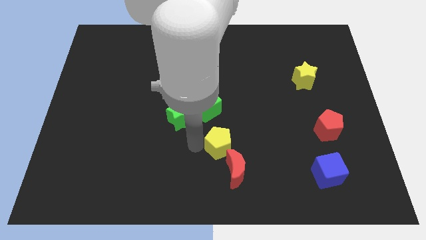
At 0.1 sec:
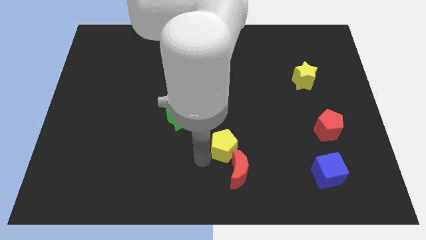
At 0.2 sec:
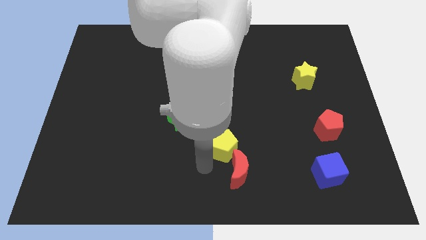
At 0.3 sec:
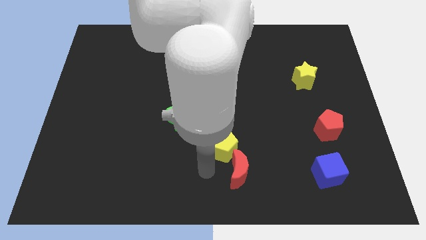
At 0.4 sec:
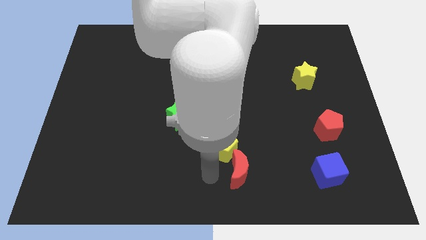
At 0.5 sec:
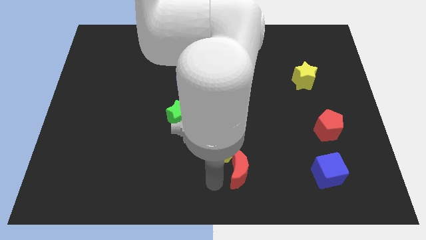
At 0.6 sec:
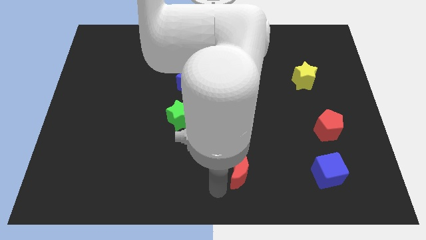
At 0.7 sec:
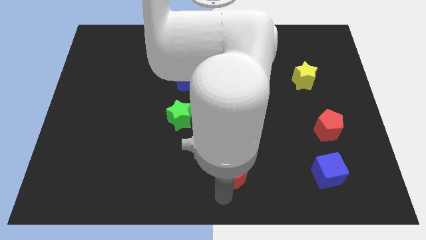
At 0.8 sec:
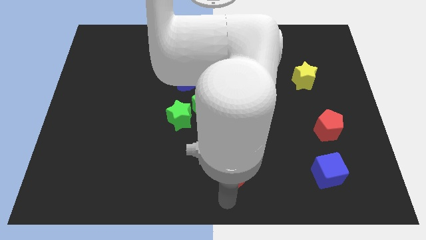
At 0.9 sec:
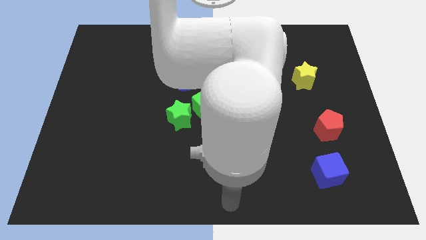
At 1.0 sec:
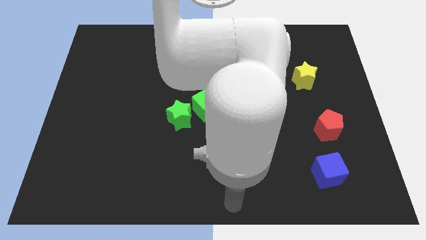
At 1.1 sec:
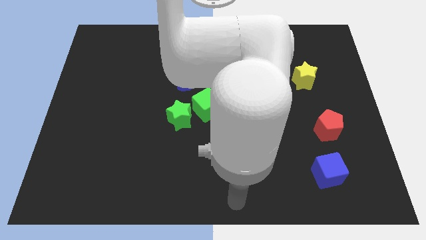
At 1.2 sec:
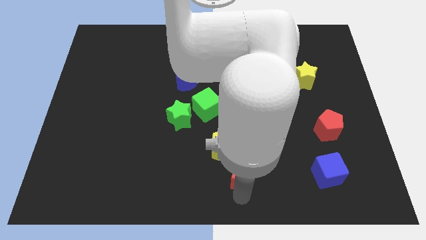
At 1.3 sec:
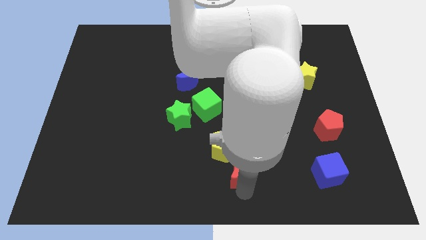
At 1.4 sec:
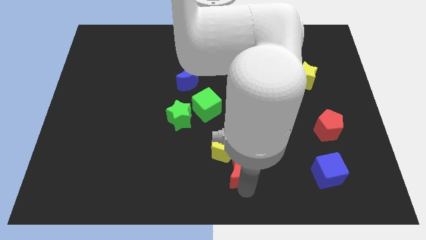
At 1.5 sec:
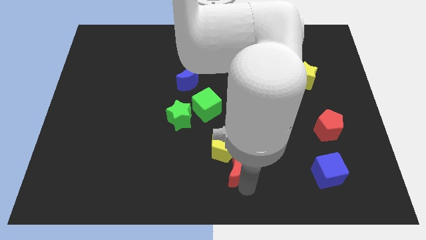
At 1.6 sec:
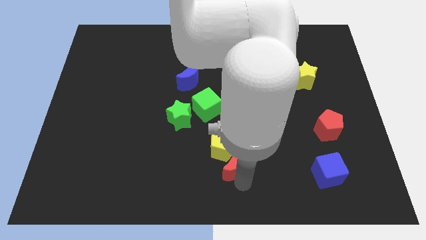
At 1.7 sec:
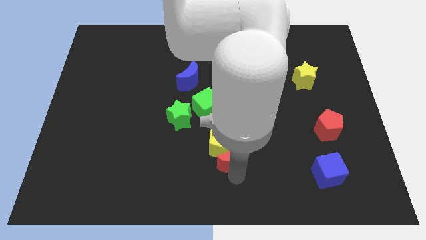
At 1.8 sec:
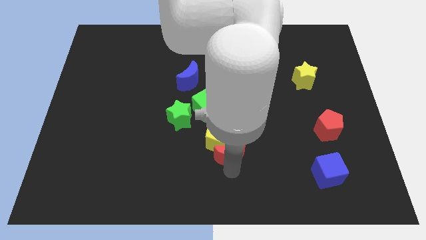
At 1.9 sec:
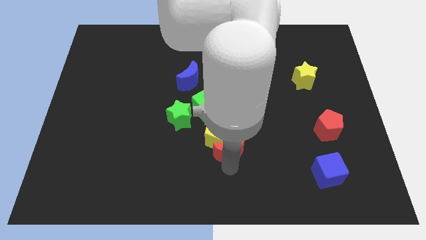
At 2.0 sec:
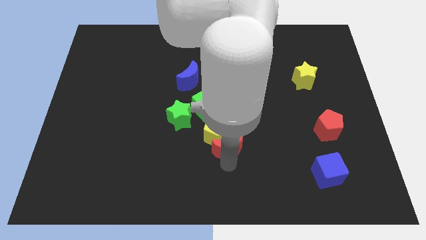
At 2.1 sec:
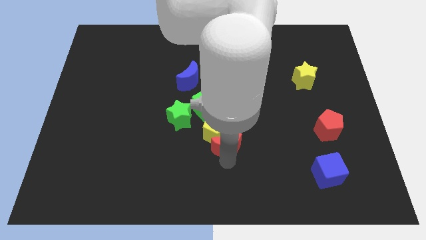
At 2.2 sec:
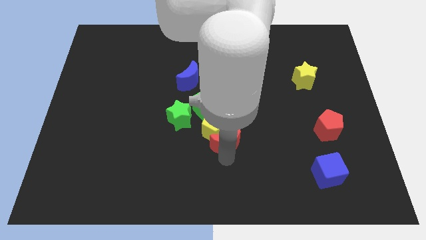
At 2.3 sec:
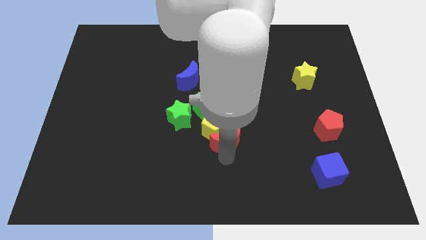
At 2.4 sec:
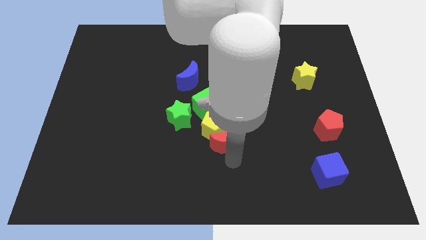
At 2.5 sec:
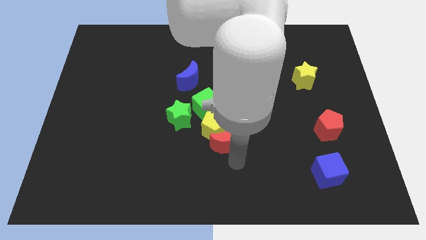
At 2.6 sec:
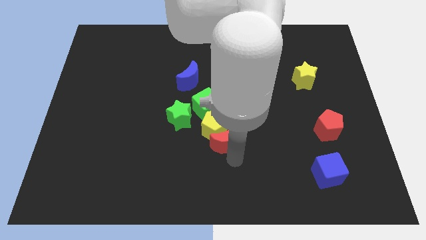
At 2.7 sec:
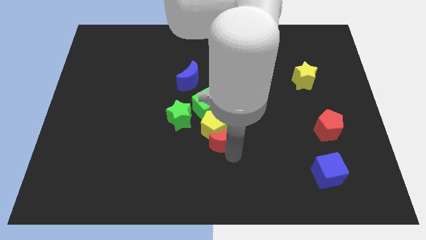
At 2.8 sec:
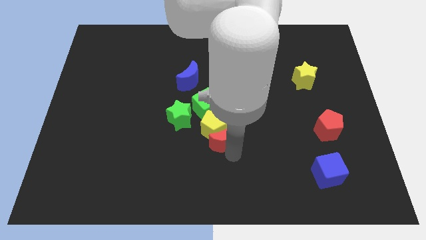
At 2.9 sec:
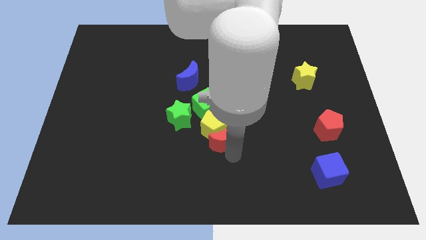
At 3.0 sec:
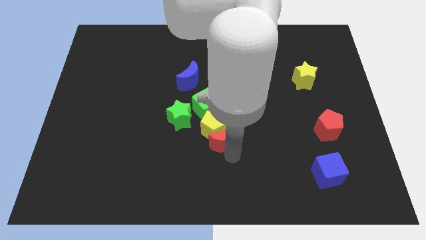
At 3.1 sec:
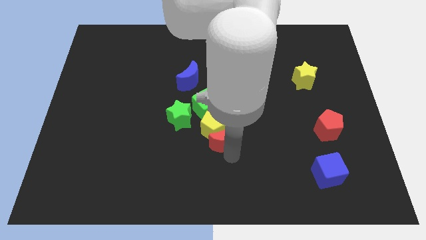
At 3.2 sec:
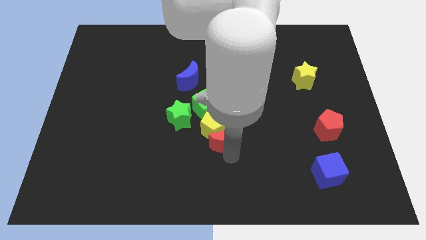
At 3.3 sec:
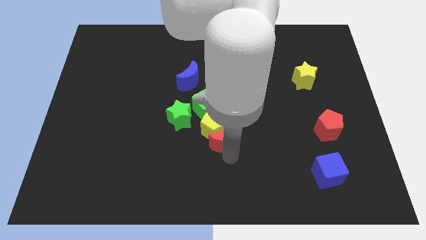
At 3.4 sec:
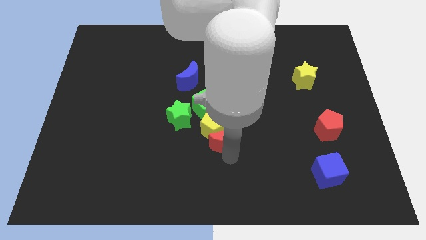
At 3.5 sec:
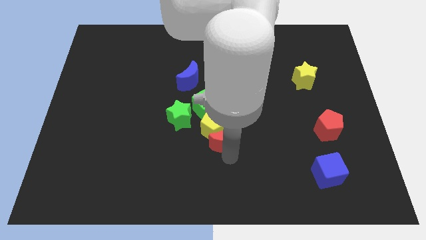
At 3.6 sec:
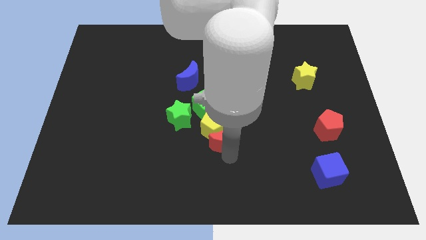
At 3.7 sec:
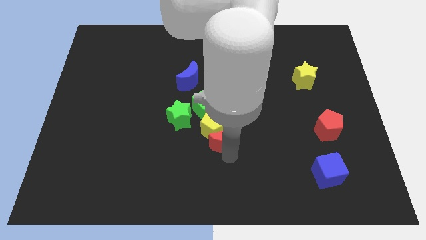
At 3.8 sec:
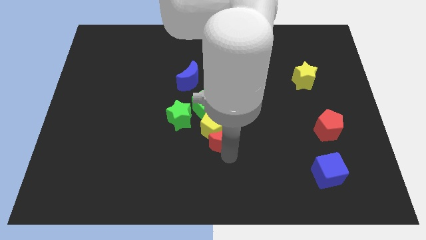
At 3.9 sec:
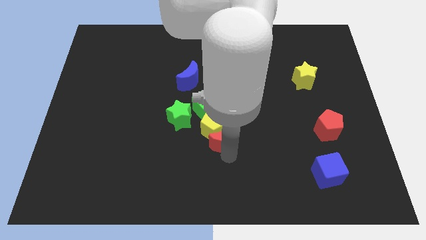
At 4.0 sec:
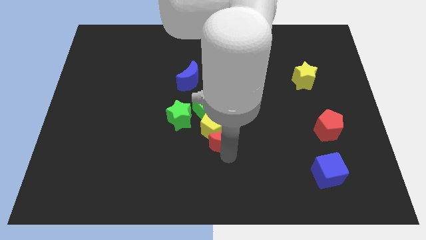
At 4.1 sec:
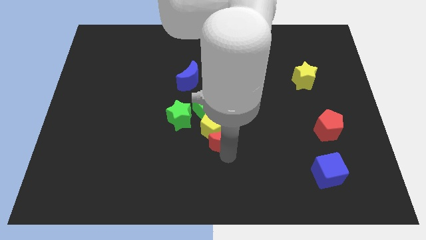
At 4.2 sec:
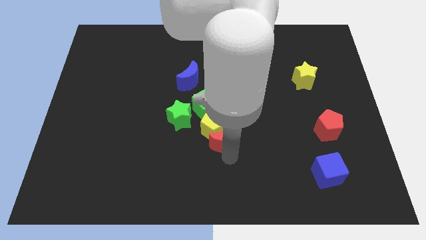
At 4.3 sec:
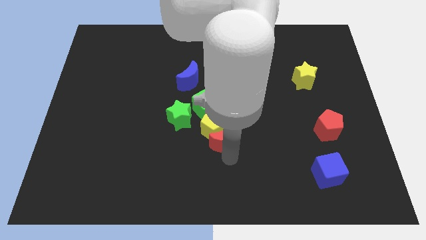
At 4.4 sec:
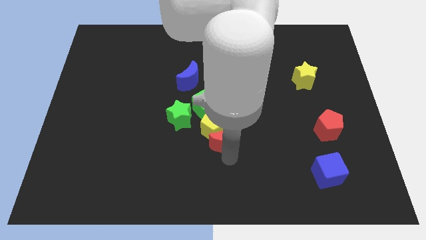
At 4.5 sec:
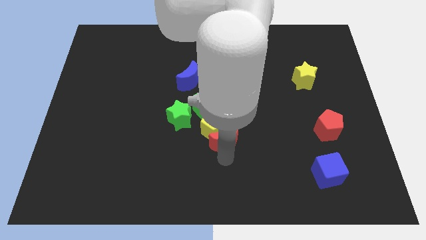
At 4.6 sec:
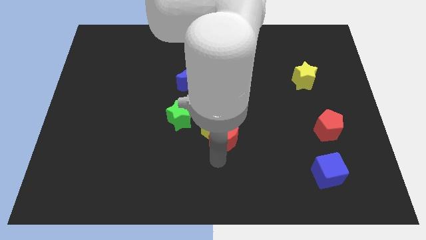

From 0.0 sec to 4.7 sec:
push the yellow pentagon and red moon into the green cube

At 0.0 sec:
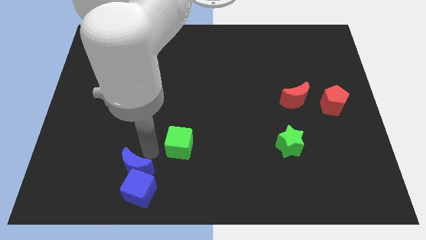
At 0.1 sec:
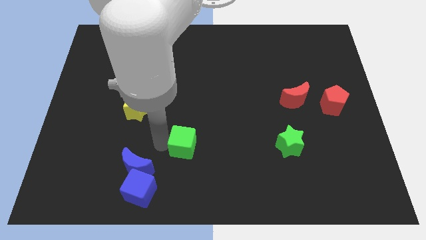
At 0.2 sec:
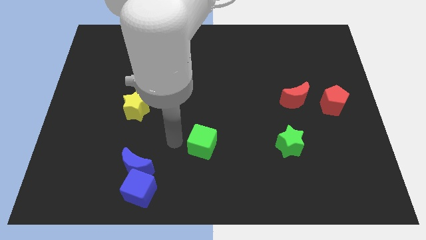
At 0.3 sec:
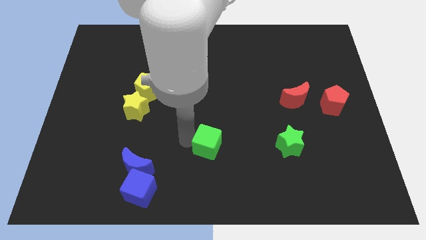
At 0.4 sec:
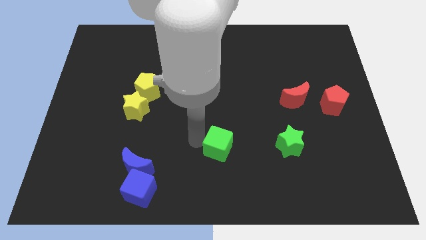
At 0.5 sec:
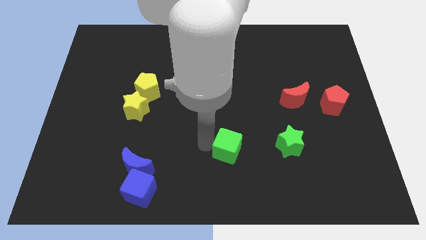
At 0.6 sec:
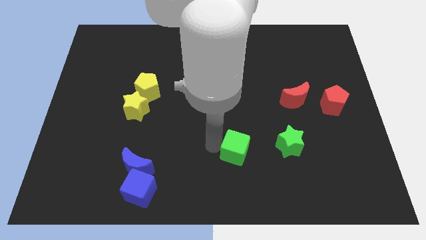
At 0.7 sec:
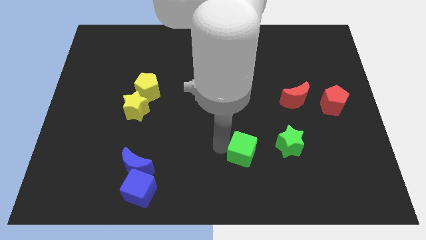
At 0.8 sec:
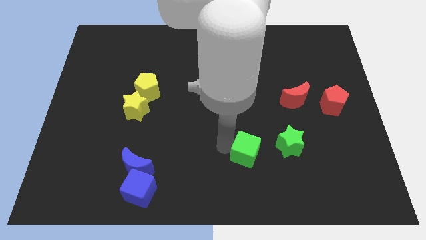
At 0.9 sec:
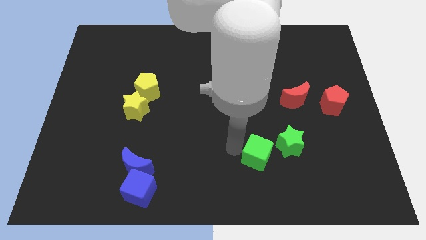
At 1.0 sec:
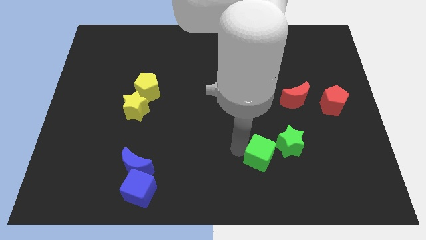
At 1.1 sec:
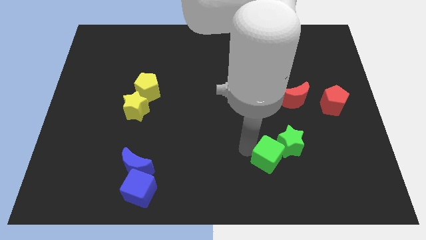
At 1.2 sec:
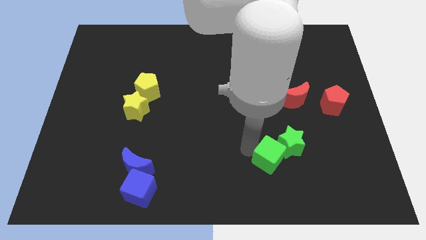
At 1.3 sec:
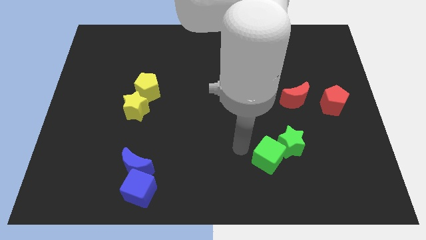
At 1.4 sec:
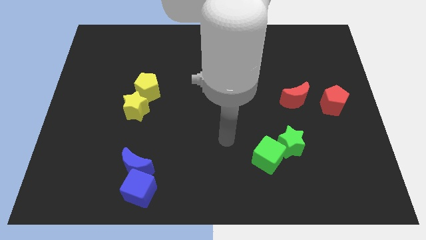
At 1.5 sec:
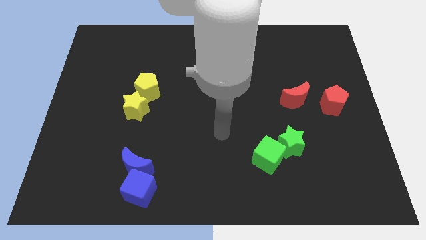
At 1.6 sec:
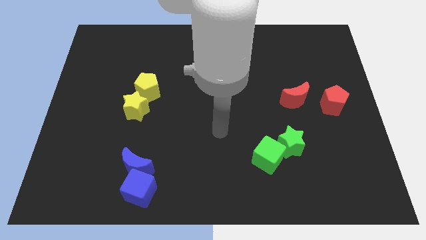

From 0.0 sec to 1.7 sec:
push the green cube into the green star

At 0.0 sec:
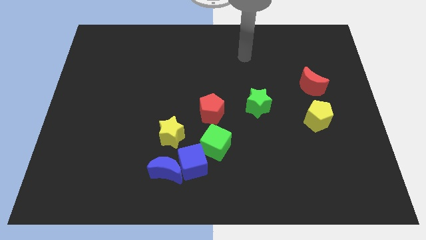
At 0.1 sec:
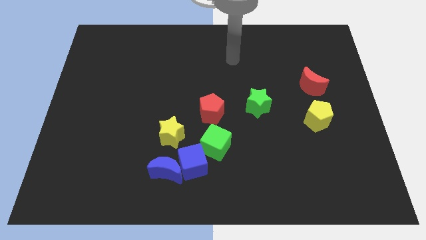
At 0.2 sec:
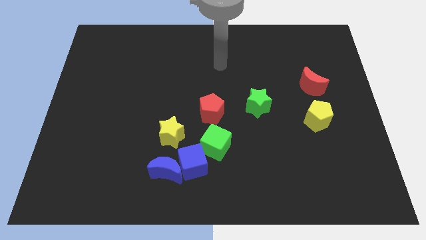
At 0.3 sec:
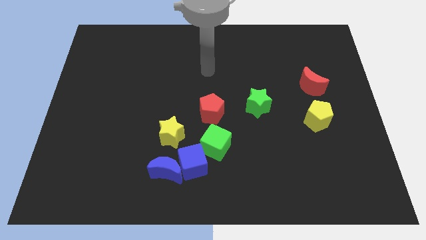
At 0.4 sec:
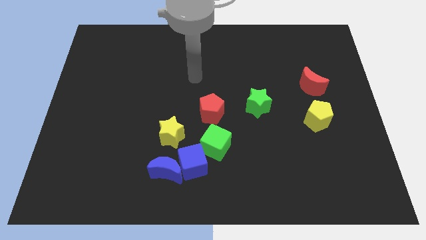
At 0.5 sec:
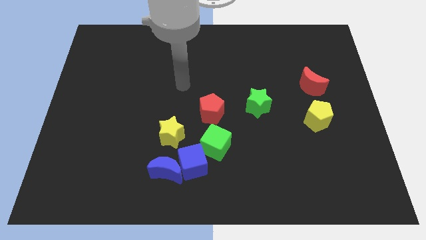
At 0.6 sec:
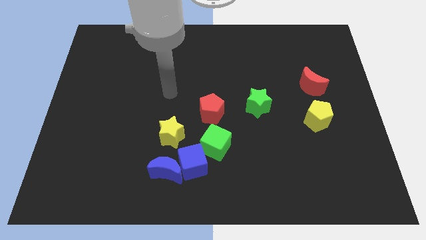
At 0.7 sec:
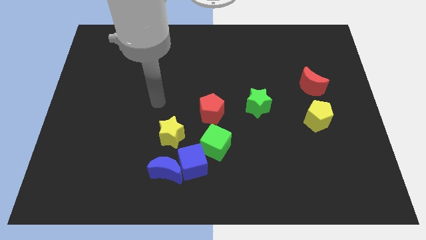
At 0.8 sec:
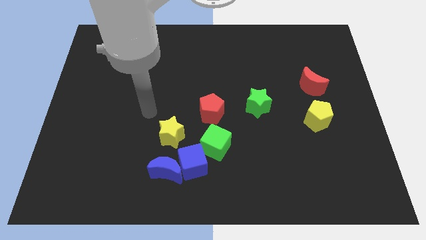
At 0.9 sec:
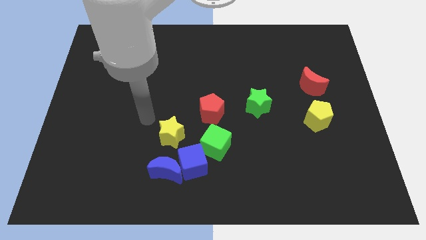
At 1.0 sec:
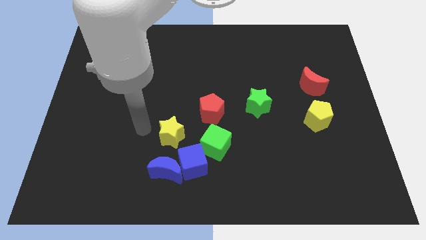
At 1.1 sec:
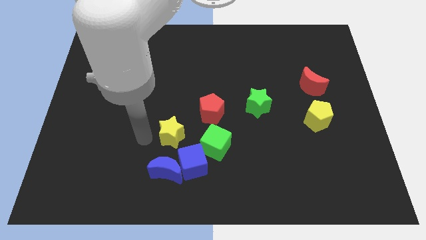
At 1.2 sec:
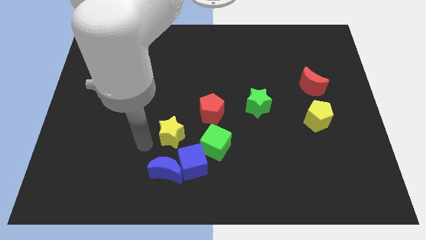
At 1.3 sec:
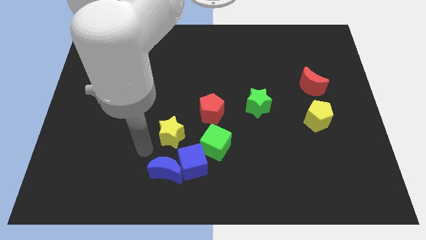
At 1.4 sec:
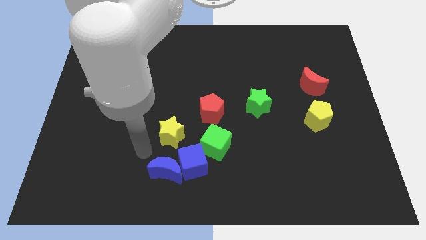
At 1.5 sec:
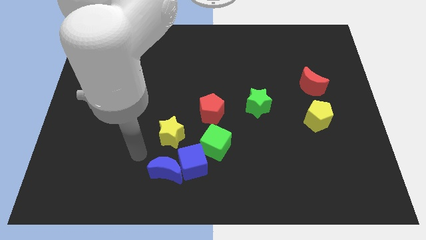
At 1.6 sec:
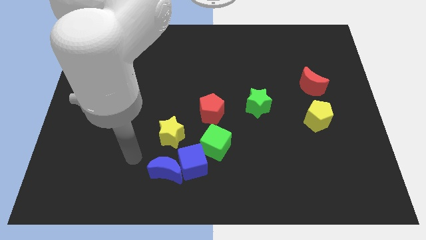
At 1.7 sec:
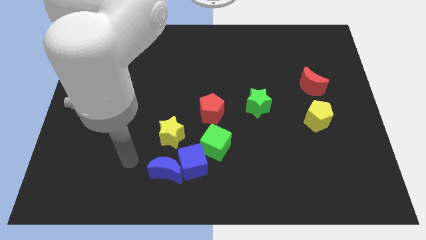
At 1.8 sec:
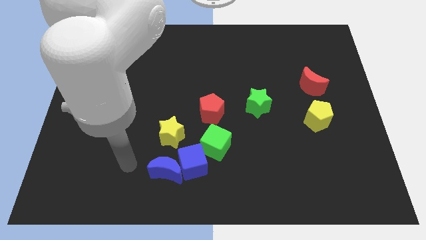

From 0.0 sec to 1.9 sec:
point your arm at the left side of the blue crescent

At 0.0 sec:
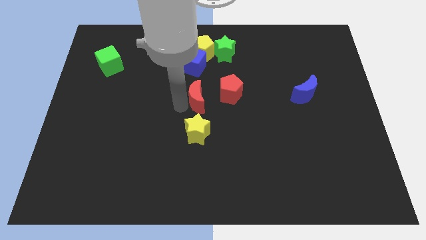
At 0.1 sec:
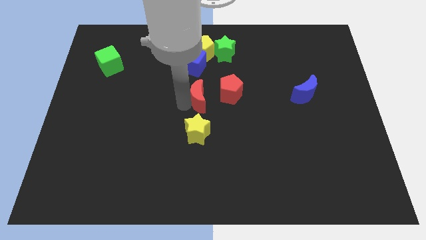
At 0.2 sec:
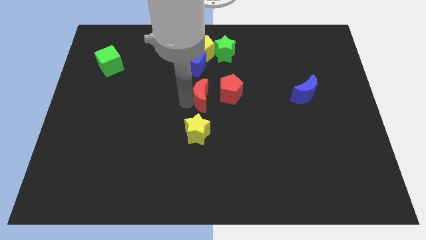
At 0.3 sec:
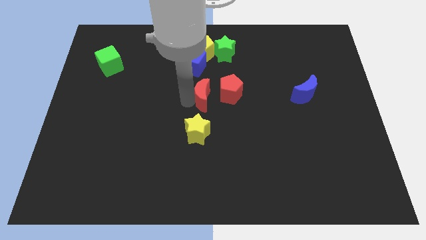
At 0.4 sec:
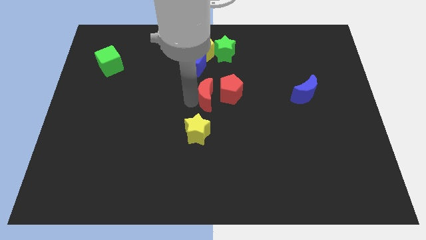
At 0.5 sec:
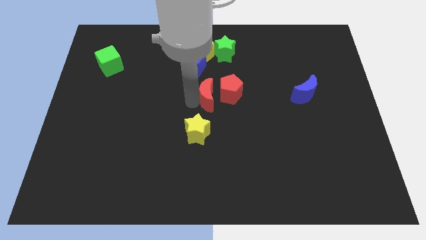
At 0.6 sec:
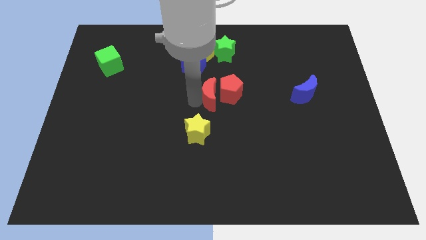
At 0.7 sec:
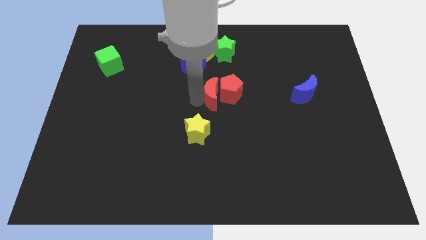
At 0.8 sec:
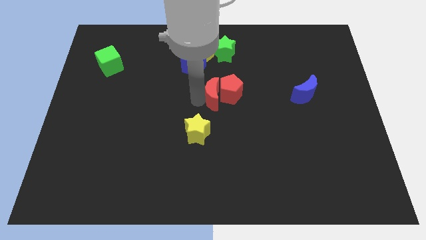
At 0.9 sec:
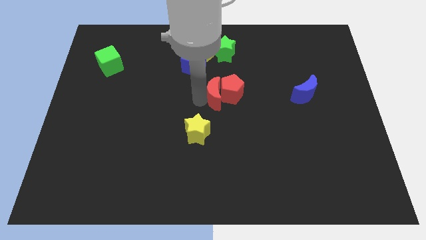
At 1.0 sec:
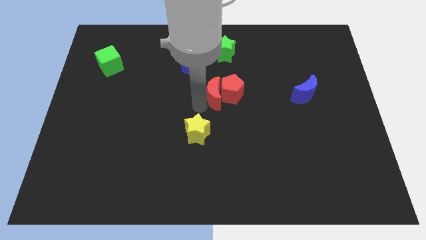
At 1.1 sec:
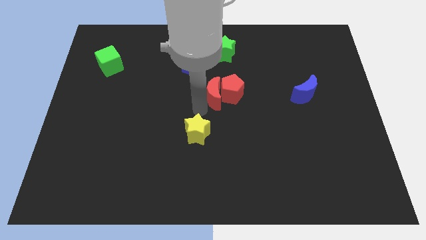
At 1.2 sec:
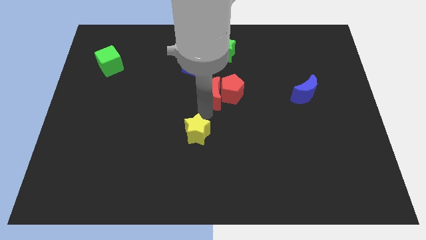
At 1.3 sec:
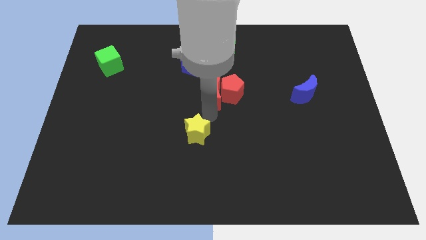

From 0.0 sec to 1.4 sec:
push the red moon to the left of the red pentagon
